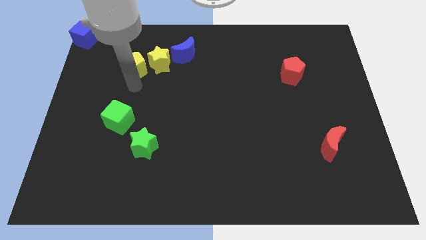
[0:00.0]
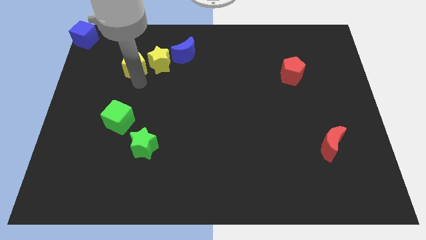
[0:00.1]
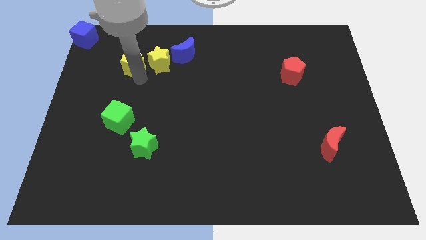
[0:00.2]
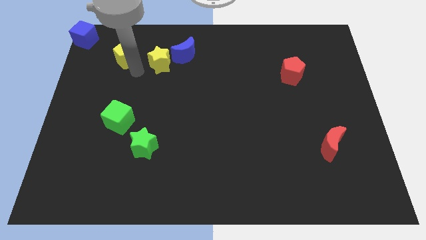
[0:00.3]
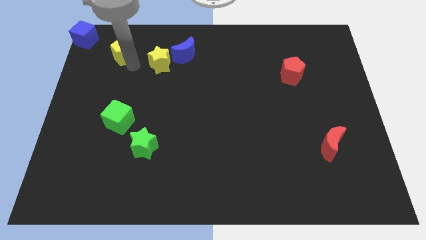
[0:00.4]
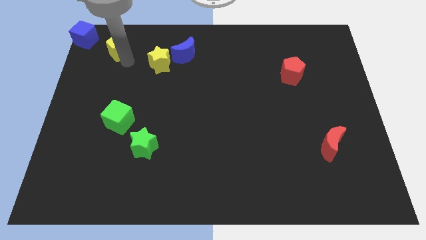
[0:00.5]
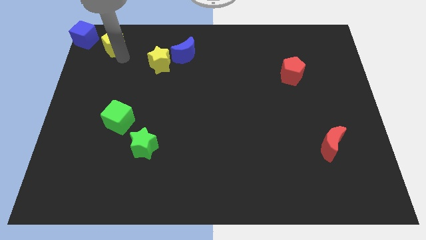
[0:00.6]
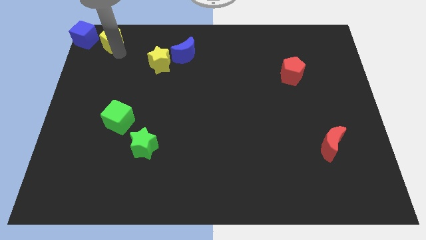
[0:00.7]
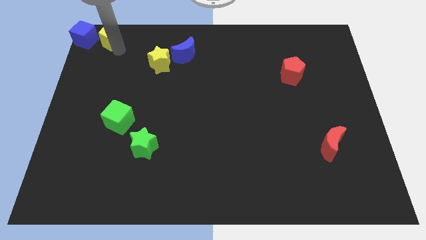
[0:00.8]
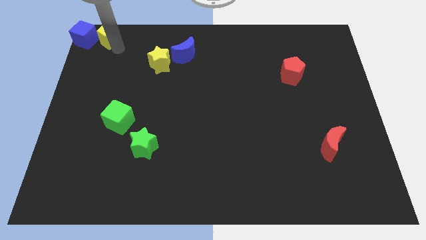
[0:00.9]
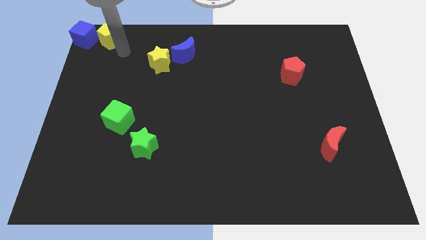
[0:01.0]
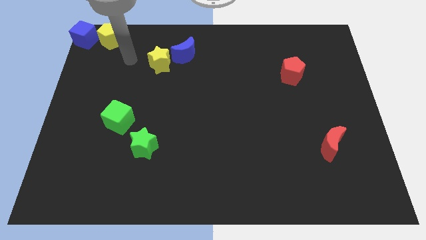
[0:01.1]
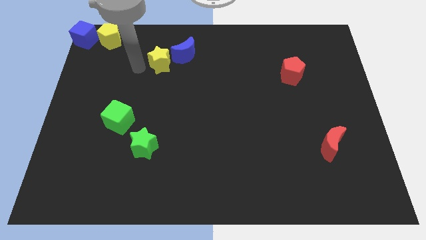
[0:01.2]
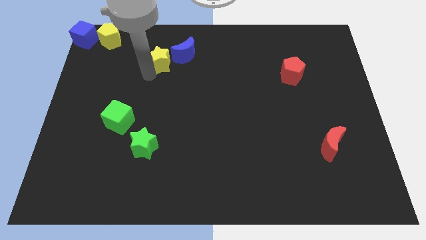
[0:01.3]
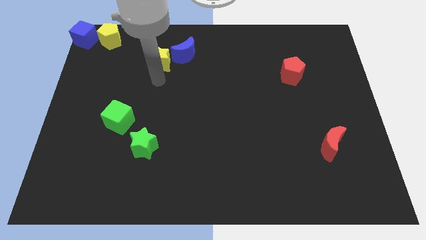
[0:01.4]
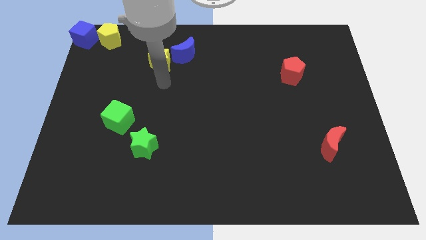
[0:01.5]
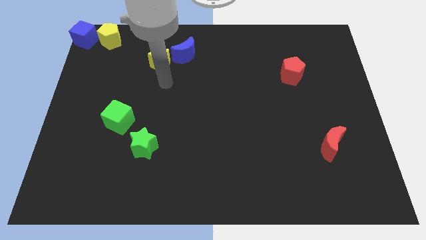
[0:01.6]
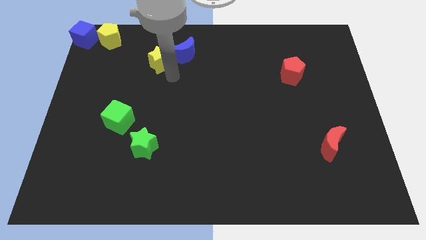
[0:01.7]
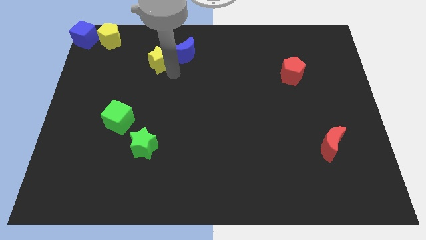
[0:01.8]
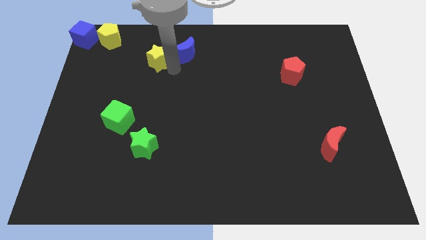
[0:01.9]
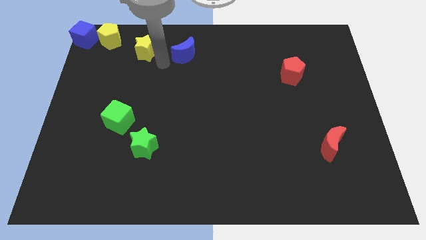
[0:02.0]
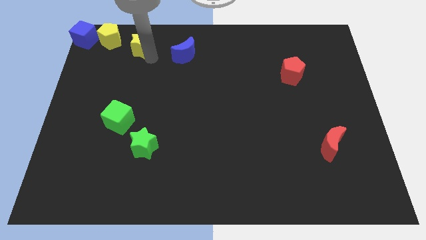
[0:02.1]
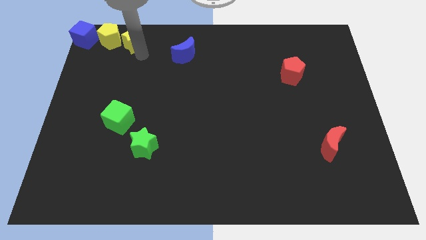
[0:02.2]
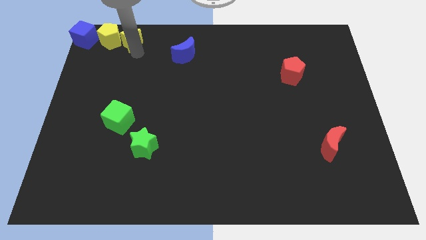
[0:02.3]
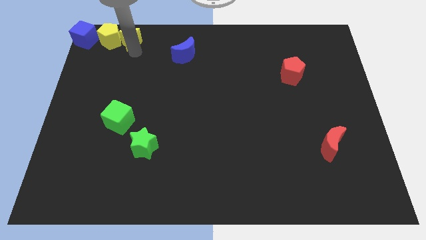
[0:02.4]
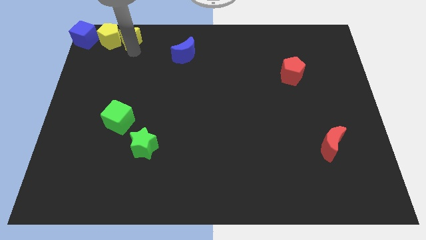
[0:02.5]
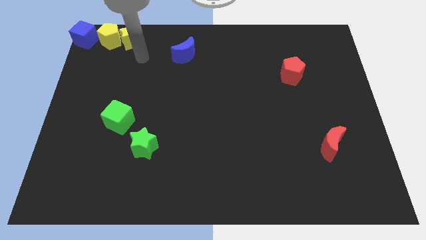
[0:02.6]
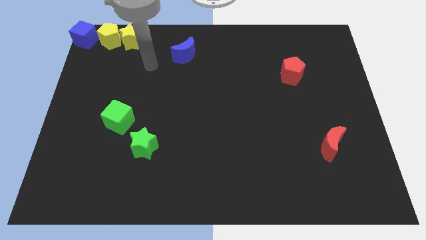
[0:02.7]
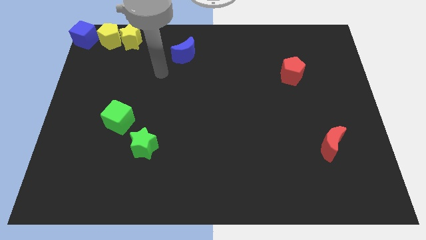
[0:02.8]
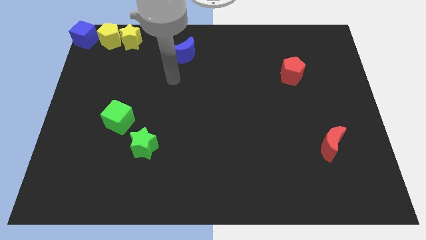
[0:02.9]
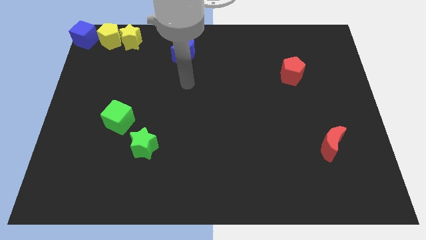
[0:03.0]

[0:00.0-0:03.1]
place the two yellow blocks to the right side of the blue cube

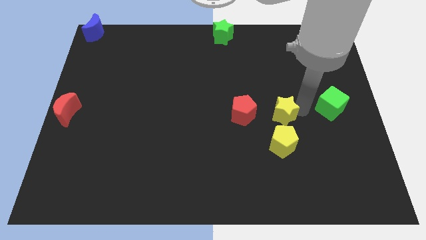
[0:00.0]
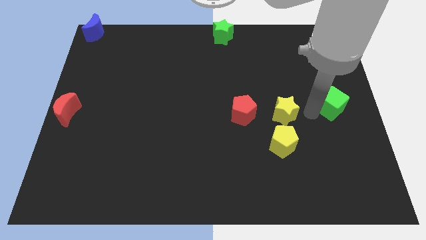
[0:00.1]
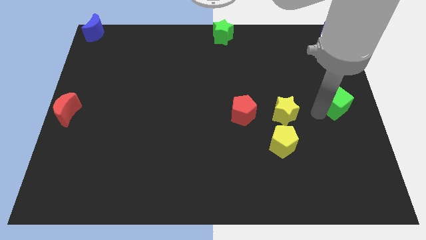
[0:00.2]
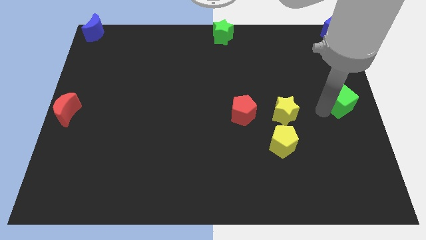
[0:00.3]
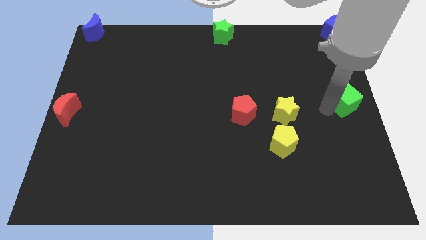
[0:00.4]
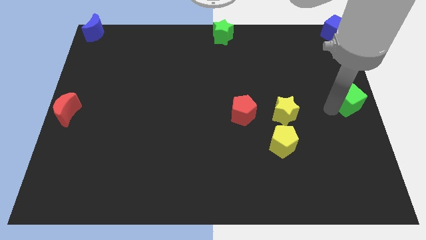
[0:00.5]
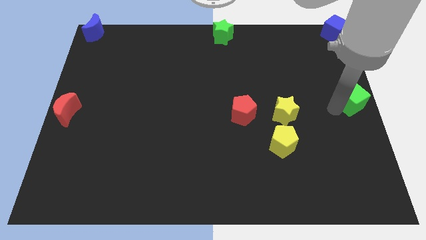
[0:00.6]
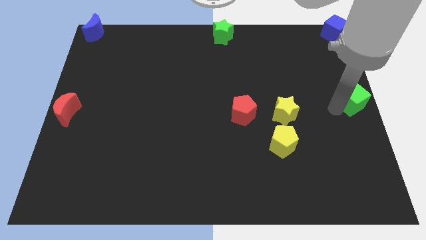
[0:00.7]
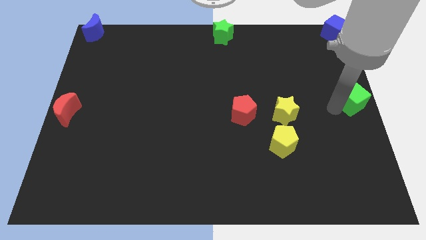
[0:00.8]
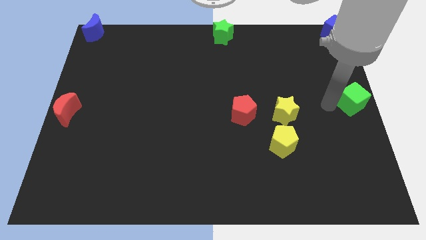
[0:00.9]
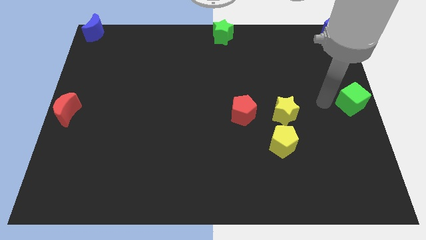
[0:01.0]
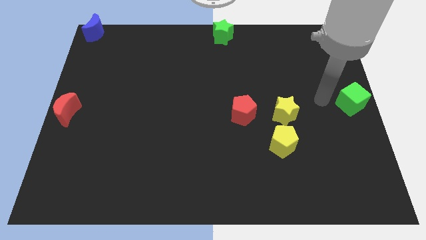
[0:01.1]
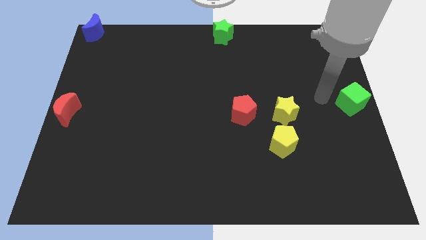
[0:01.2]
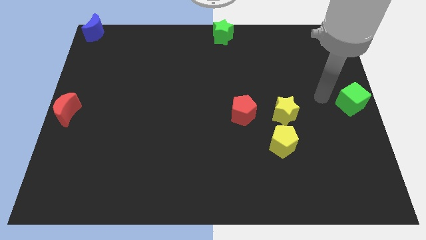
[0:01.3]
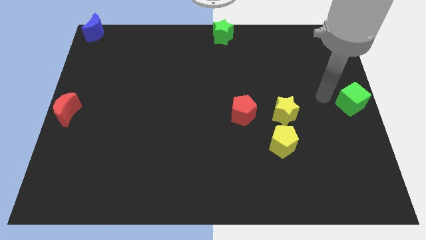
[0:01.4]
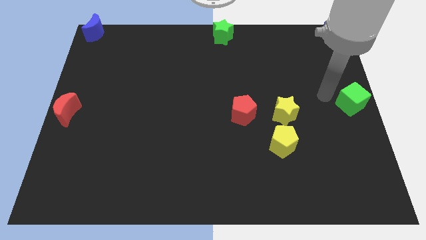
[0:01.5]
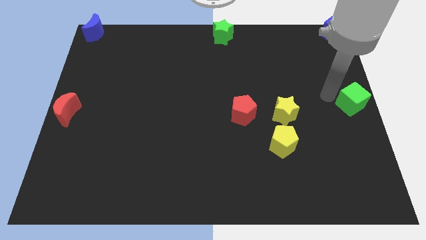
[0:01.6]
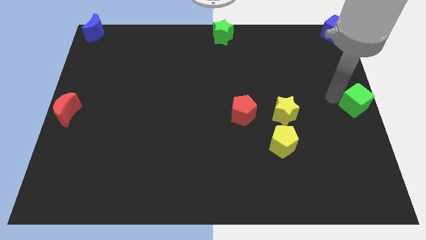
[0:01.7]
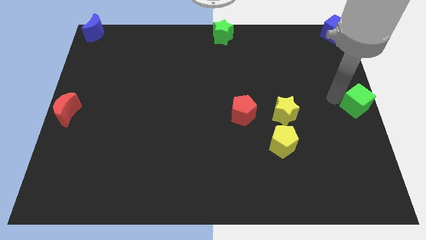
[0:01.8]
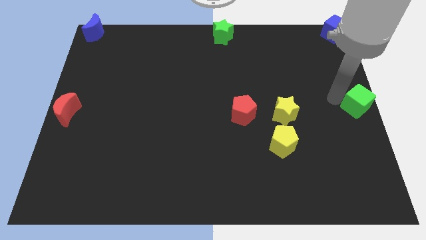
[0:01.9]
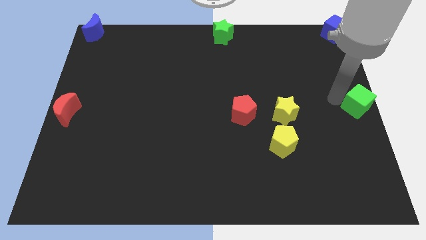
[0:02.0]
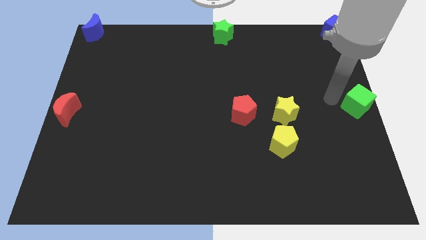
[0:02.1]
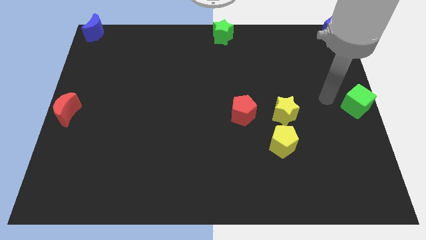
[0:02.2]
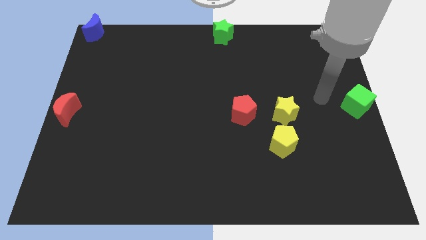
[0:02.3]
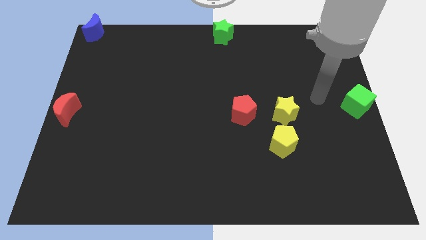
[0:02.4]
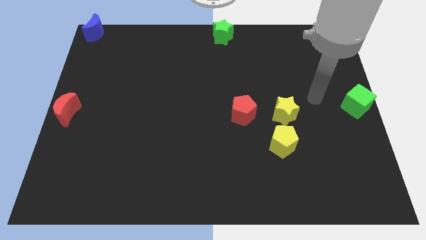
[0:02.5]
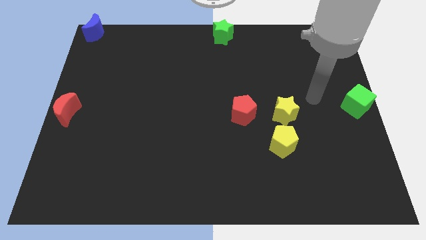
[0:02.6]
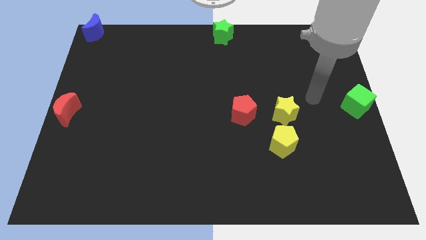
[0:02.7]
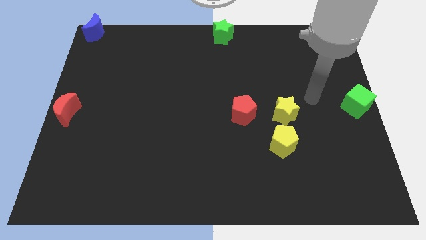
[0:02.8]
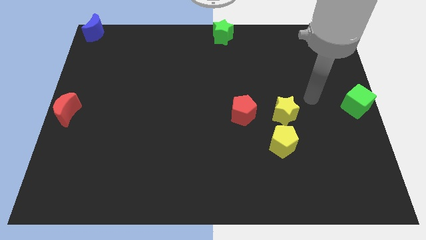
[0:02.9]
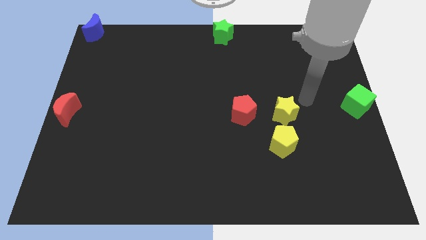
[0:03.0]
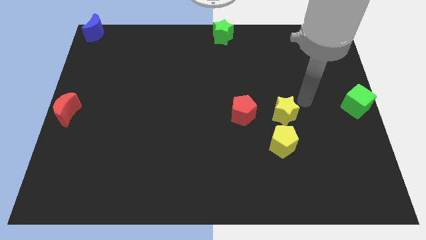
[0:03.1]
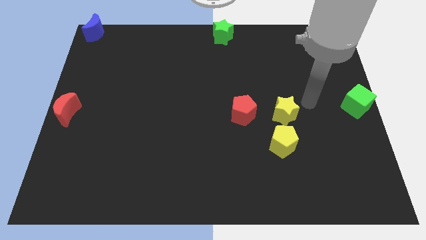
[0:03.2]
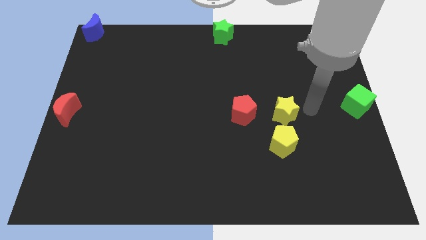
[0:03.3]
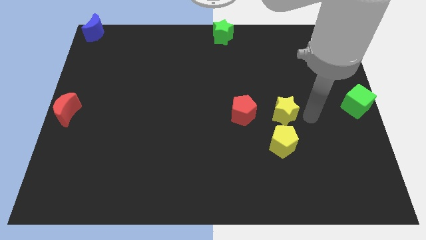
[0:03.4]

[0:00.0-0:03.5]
put the green cube to the center right side of the board

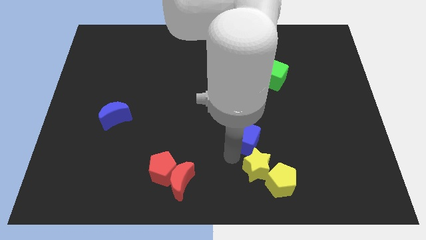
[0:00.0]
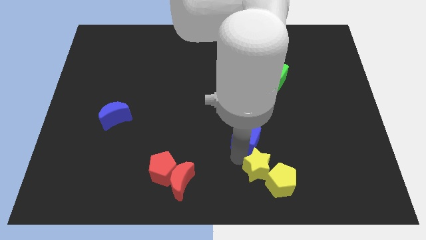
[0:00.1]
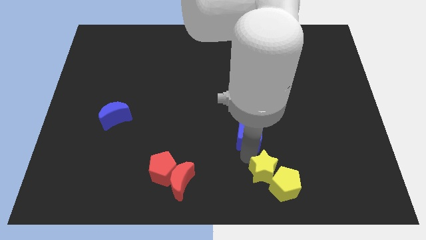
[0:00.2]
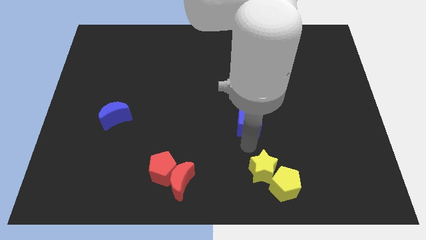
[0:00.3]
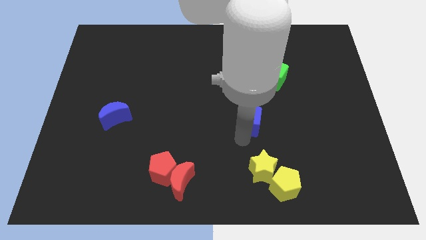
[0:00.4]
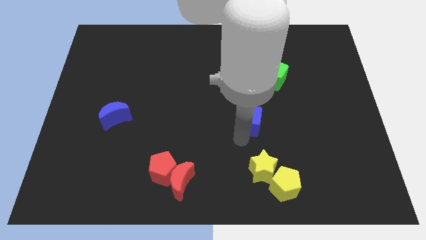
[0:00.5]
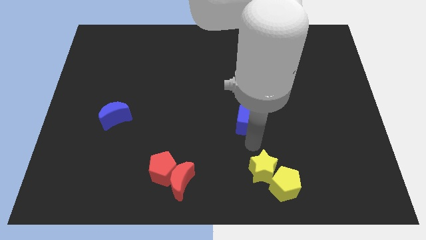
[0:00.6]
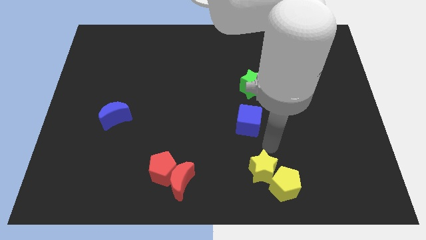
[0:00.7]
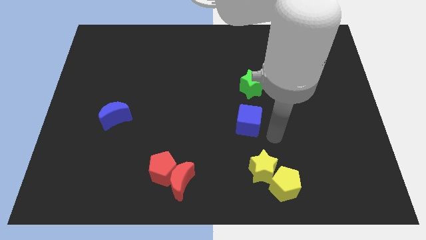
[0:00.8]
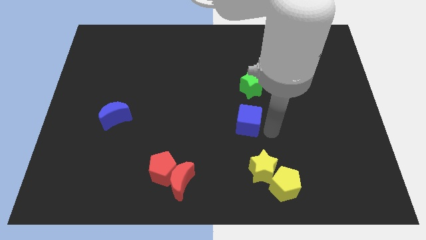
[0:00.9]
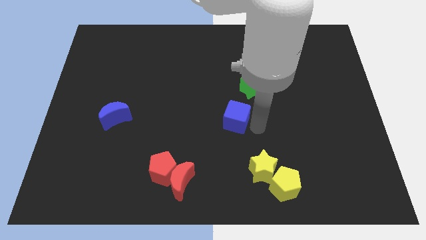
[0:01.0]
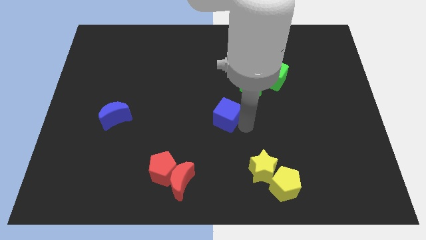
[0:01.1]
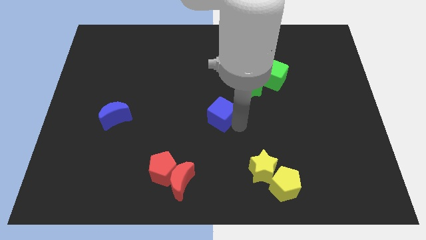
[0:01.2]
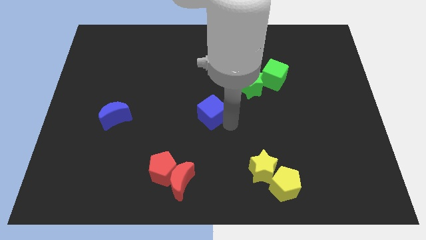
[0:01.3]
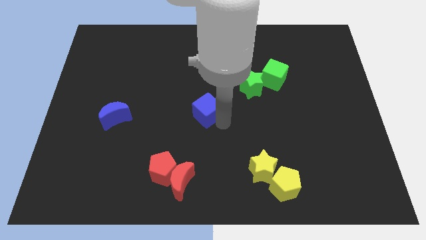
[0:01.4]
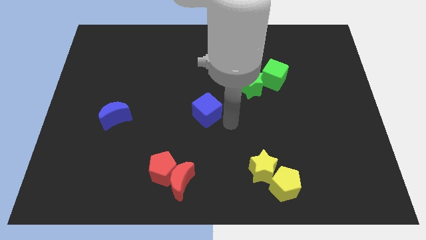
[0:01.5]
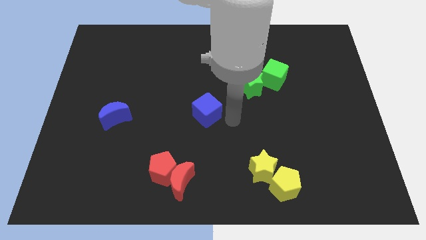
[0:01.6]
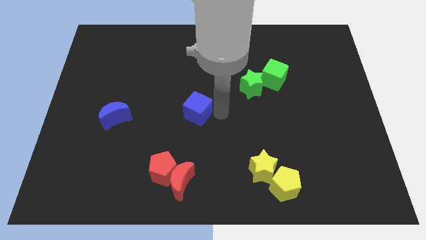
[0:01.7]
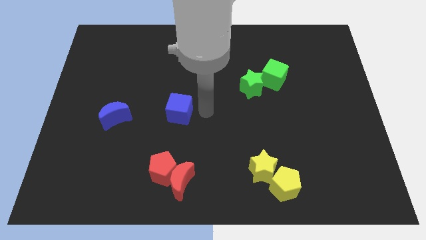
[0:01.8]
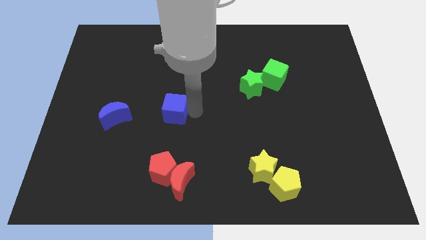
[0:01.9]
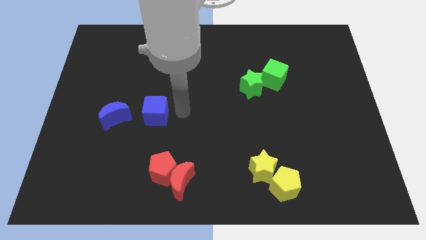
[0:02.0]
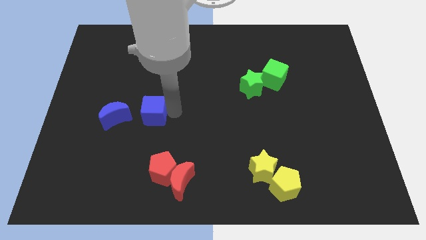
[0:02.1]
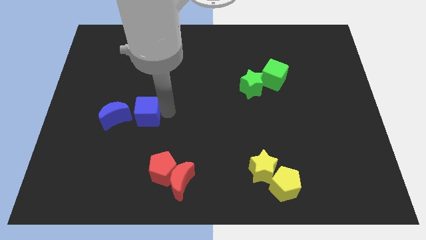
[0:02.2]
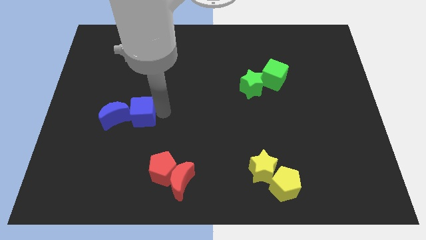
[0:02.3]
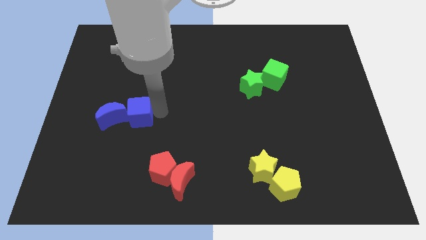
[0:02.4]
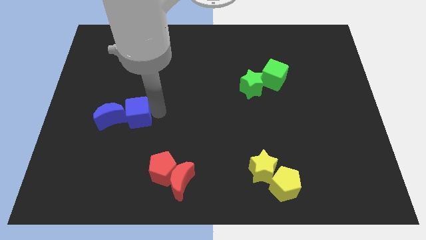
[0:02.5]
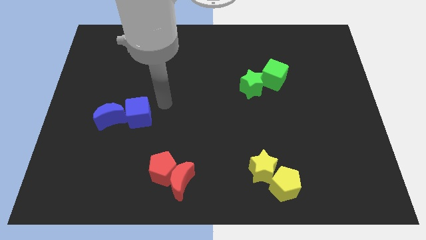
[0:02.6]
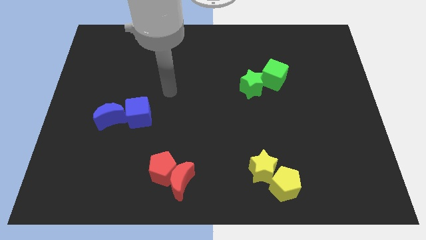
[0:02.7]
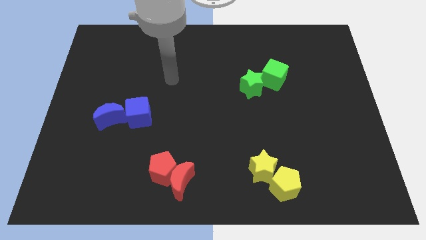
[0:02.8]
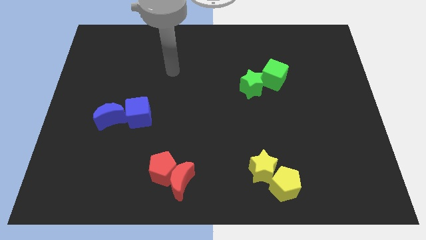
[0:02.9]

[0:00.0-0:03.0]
drag the blue cube to the left side of the board
